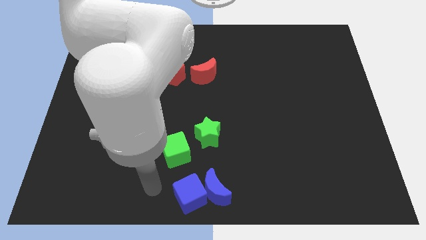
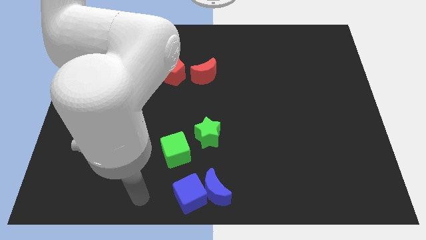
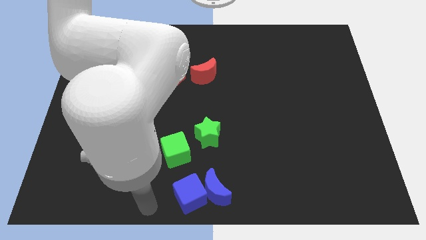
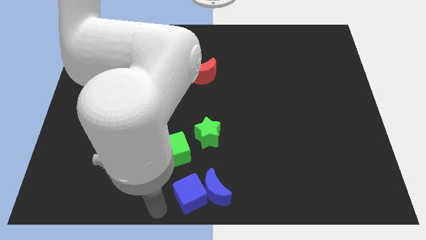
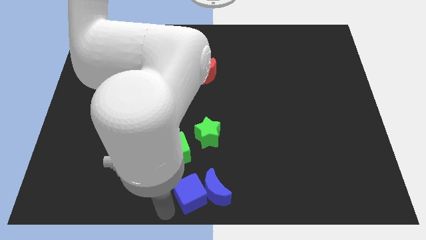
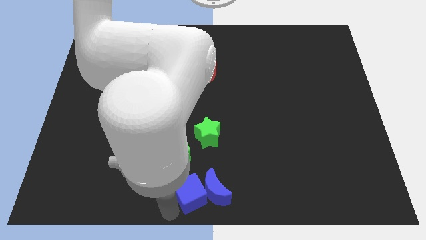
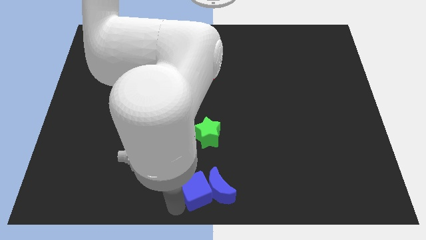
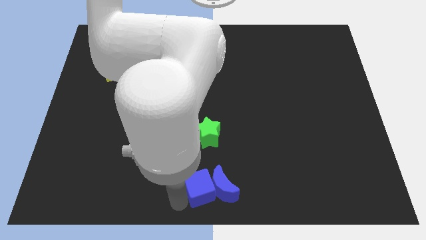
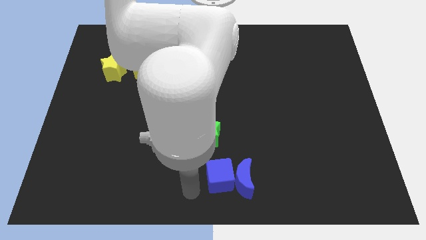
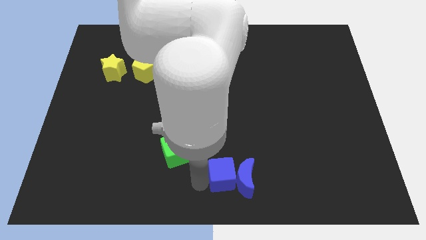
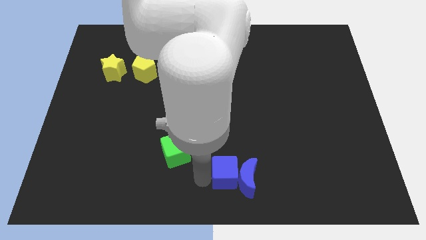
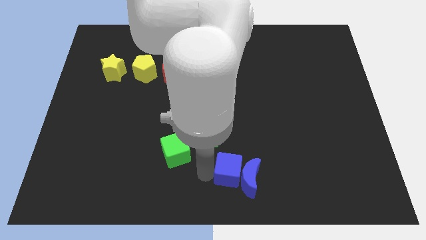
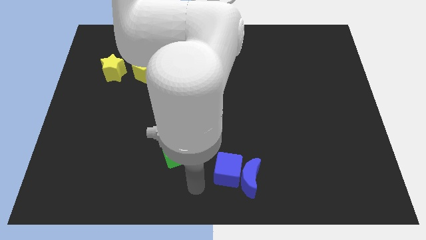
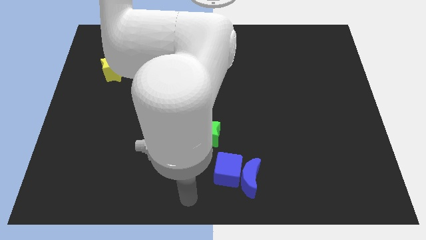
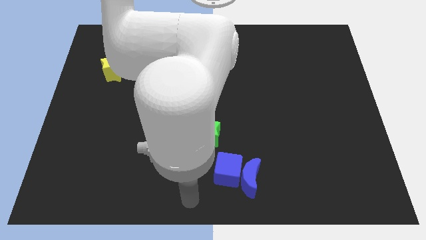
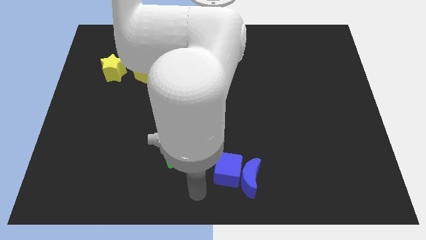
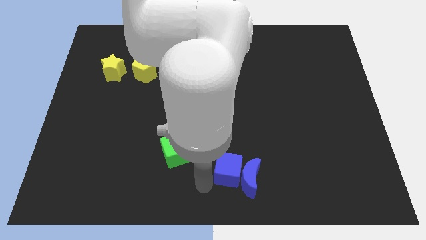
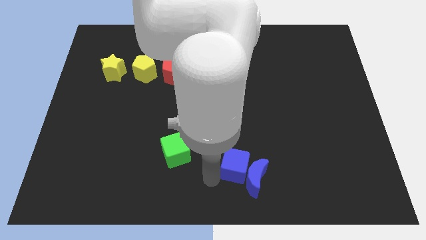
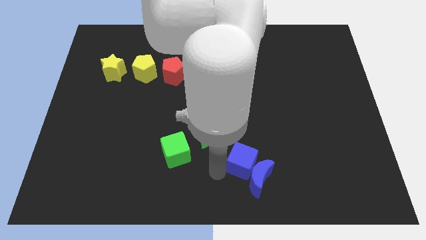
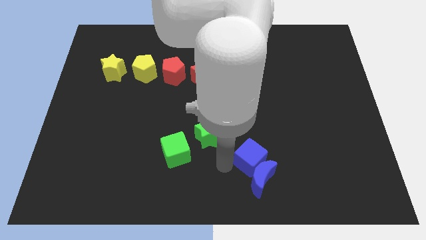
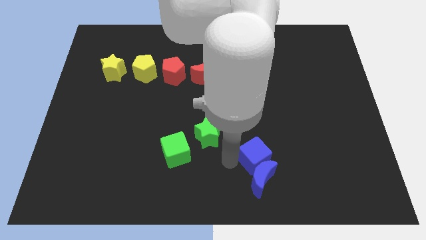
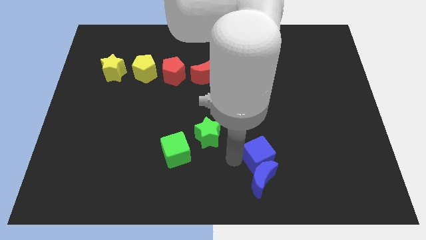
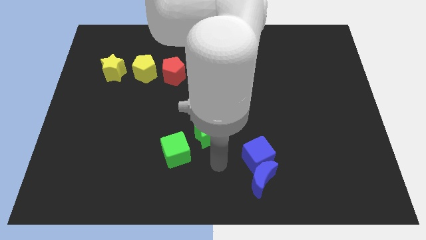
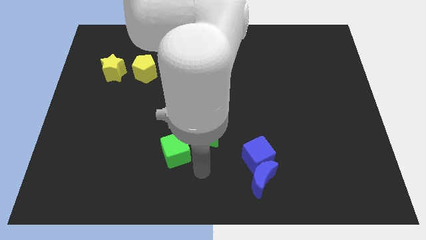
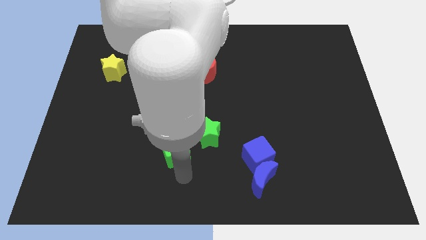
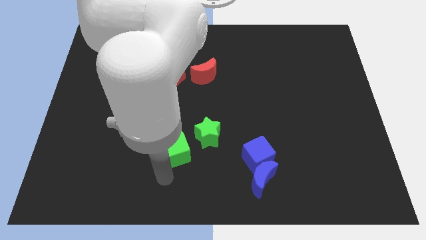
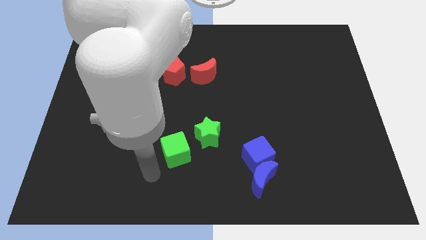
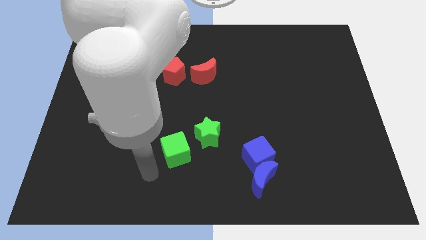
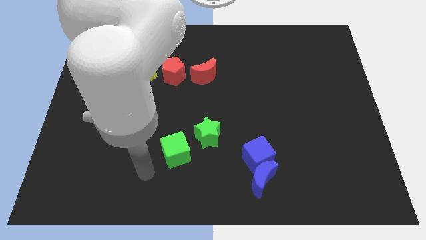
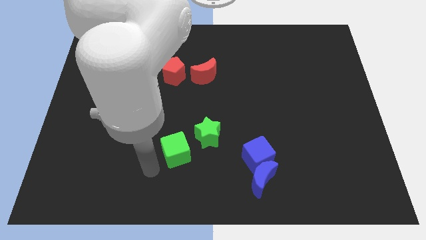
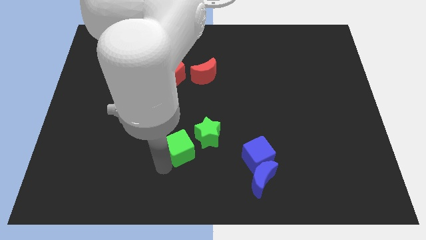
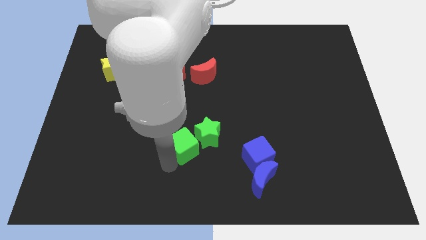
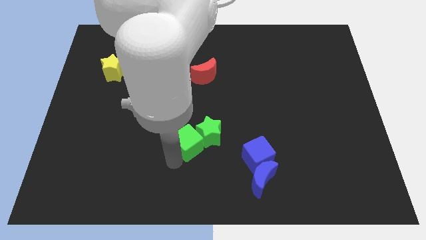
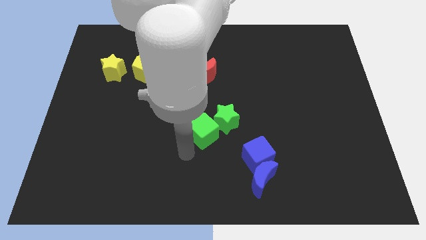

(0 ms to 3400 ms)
move the blue square to the center of the board

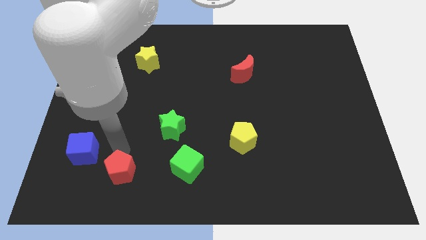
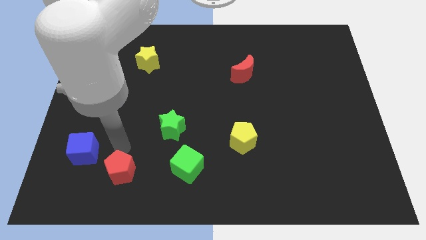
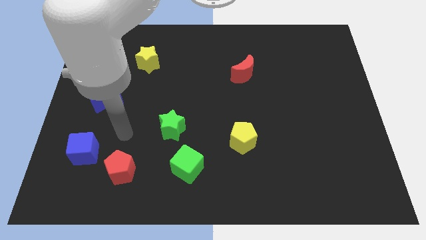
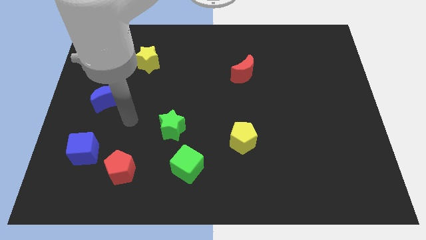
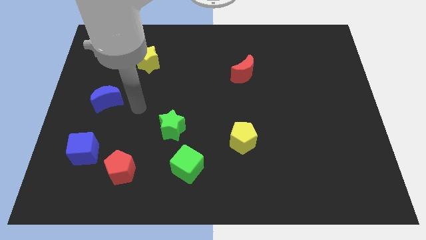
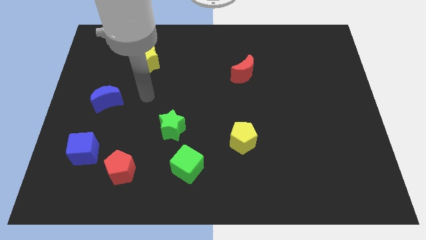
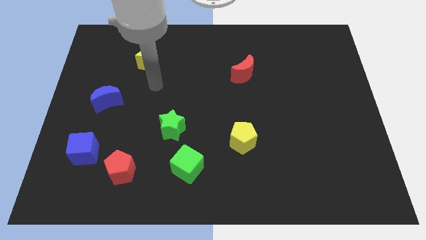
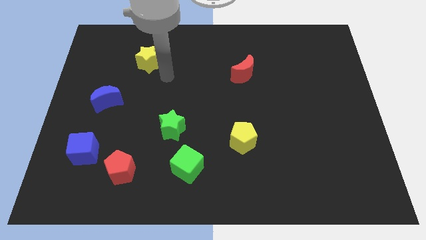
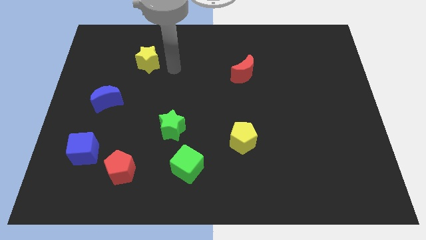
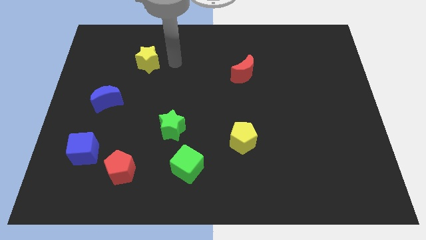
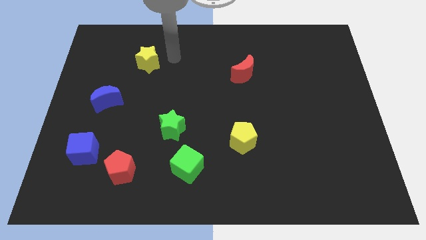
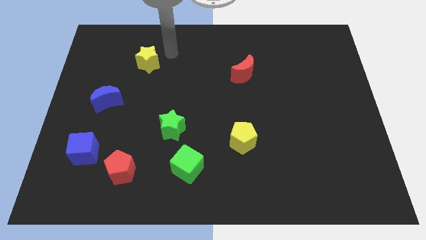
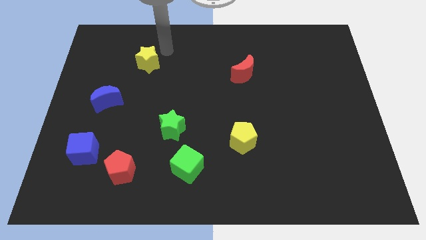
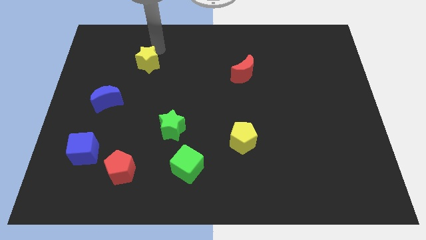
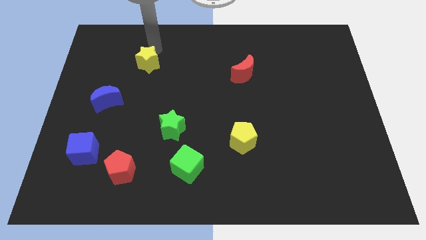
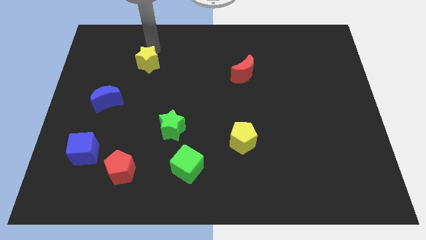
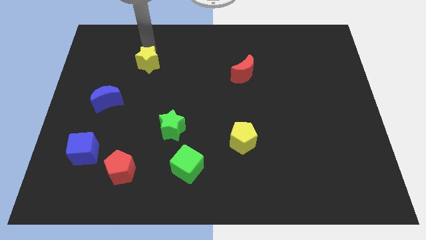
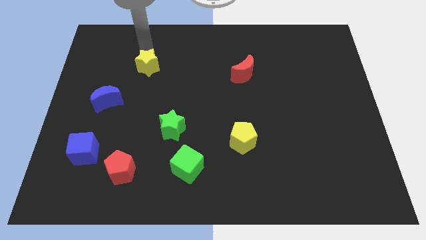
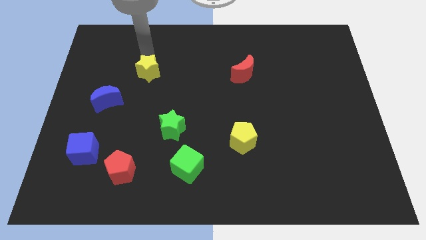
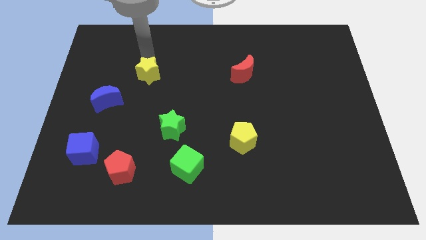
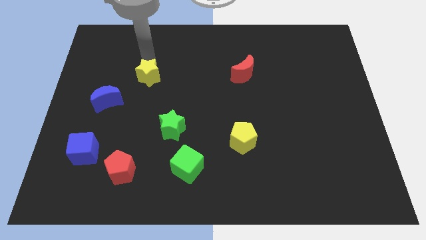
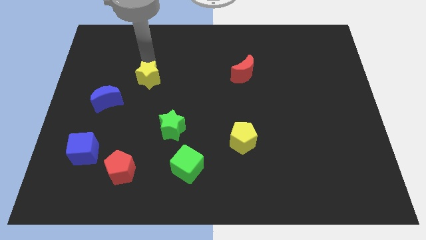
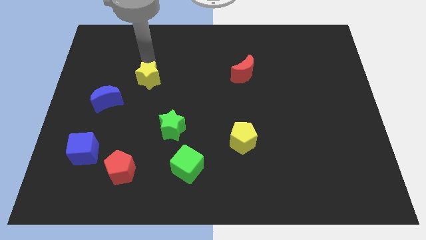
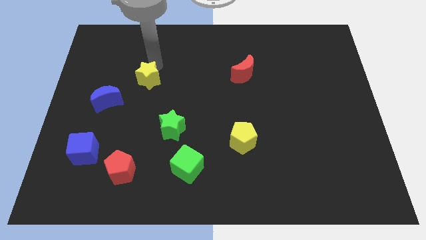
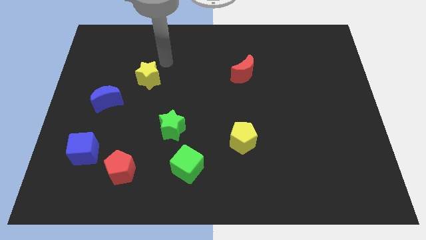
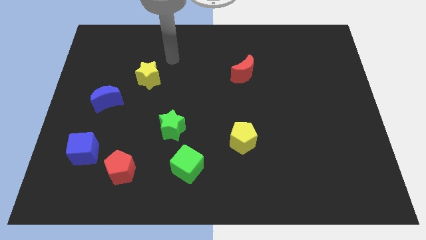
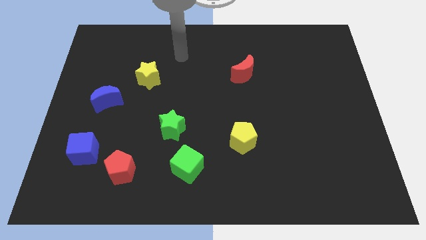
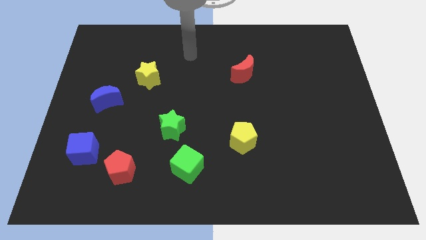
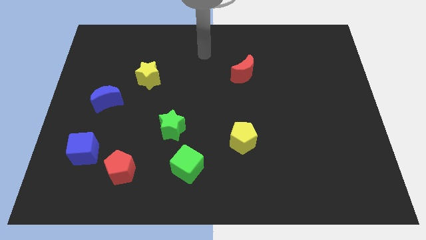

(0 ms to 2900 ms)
move your arm into the yellow star

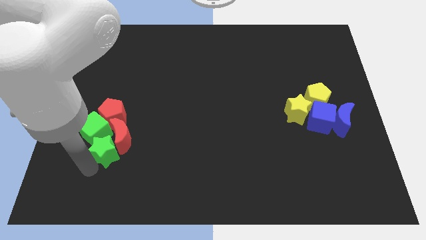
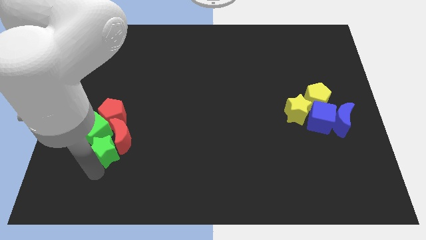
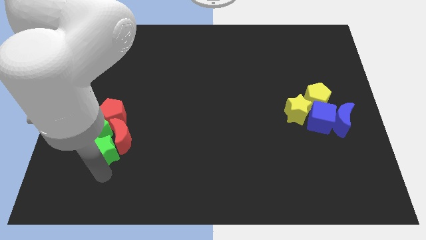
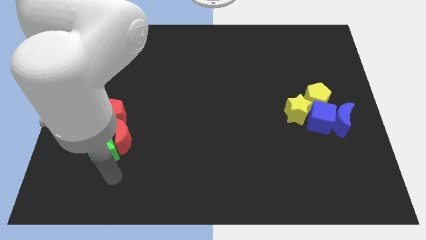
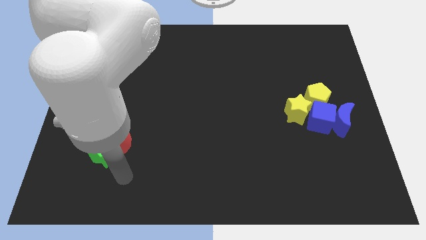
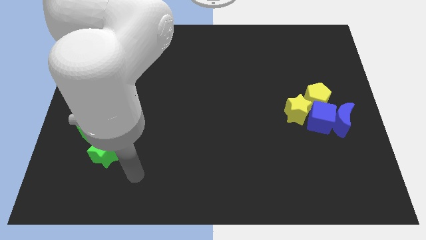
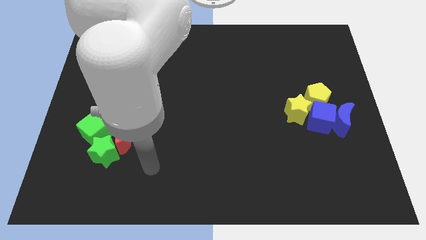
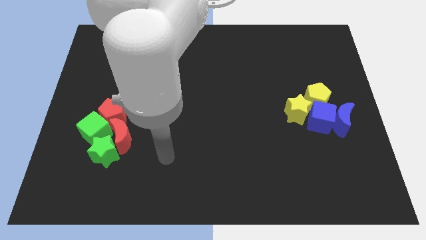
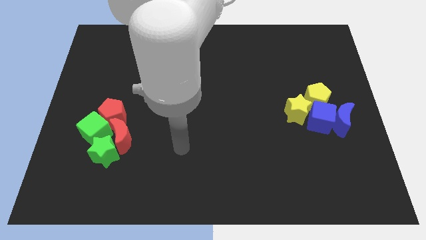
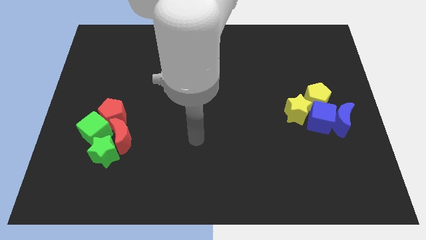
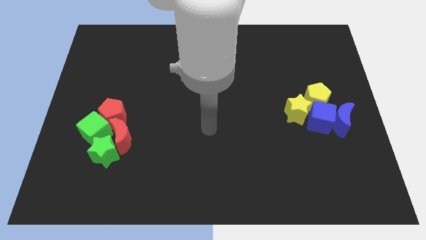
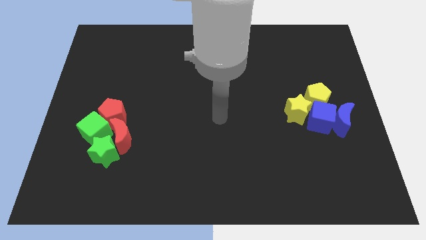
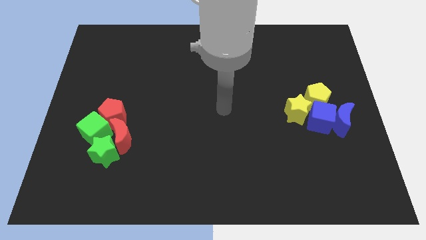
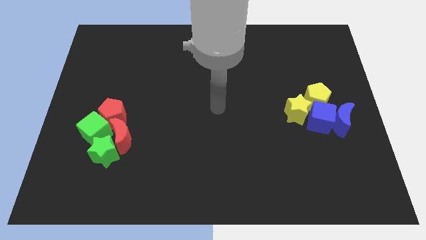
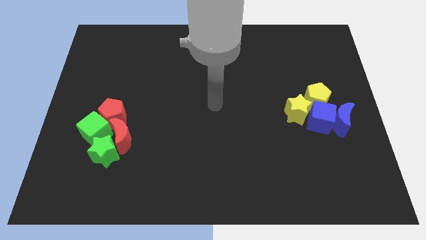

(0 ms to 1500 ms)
move your arm to the center of the board

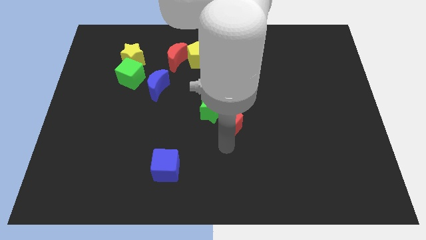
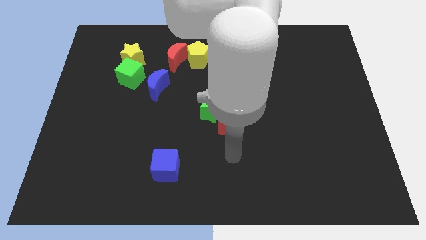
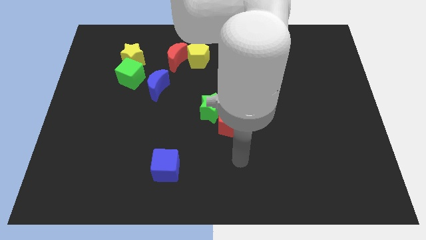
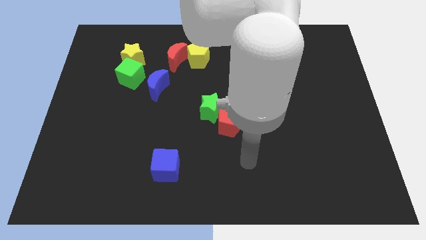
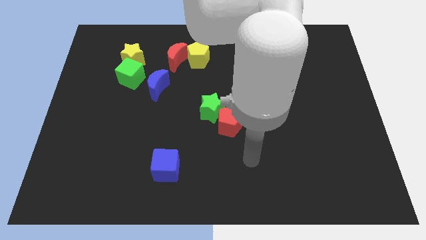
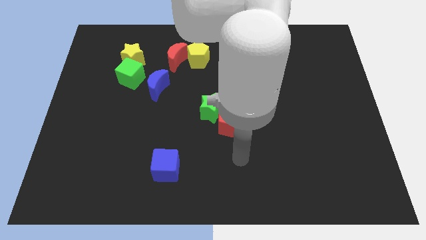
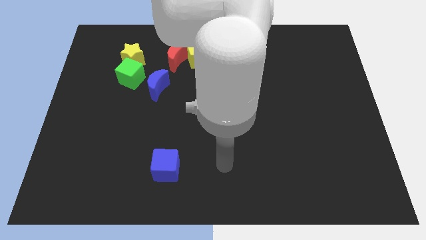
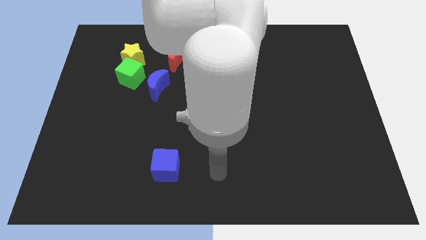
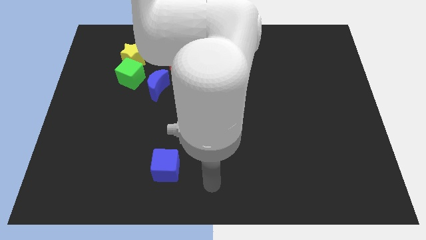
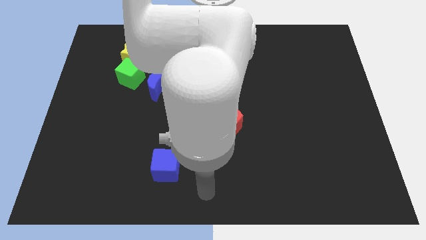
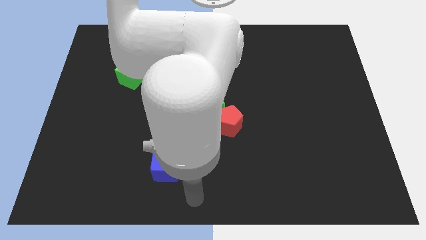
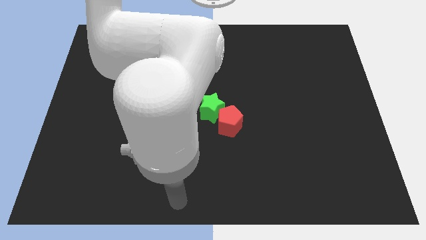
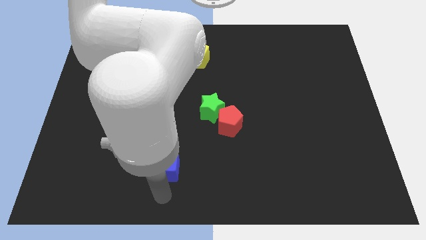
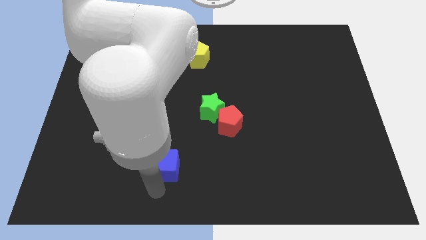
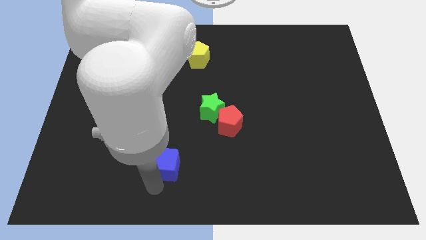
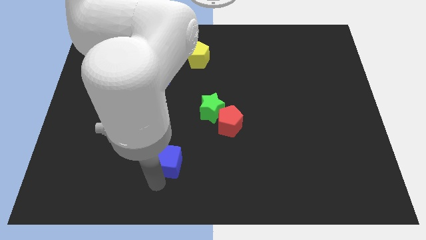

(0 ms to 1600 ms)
point the arm below the blue cube
